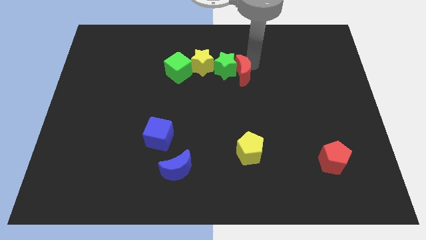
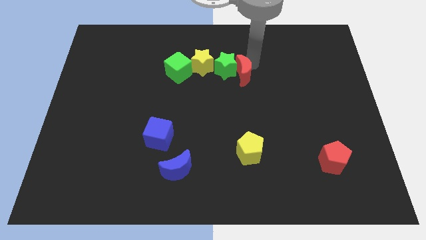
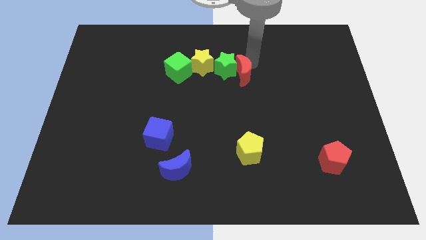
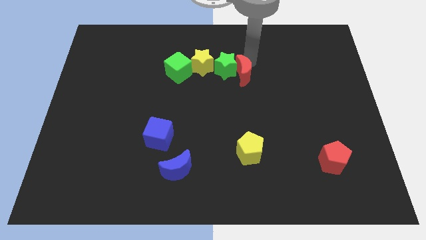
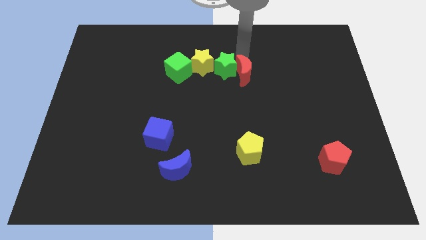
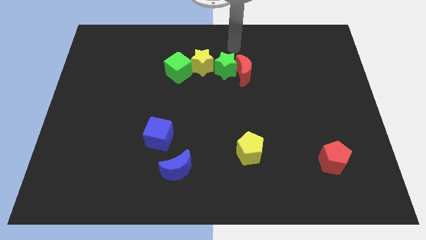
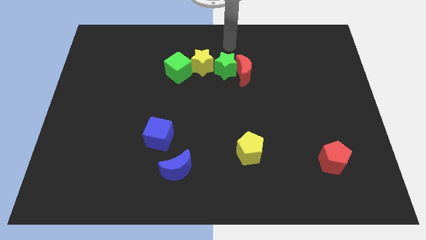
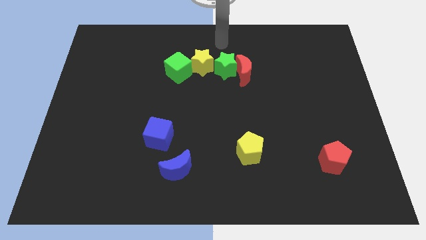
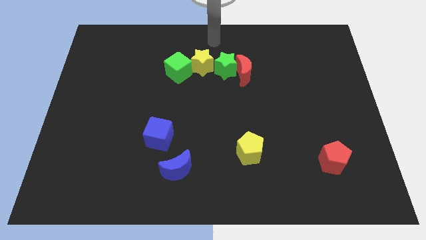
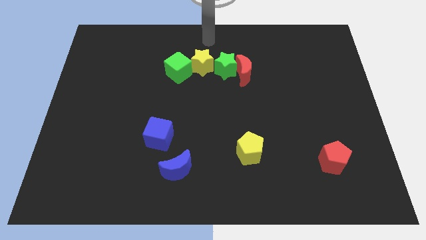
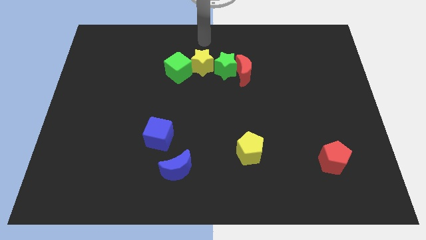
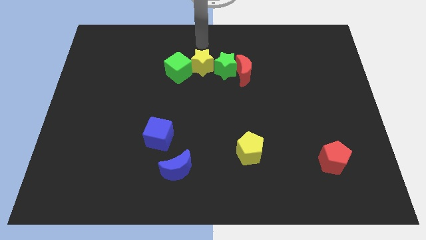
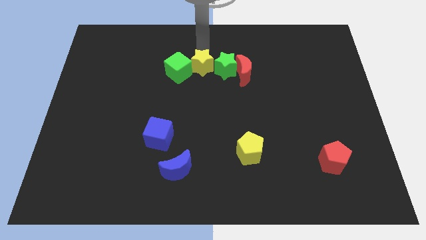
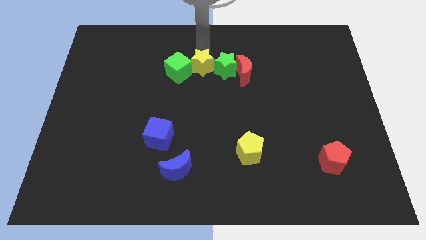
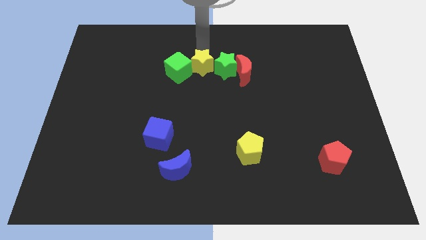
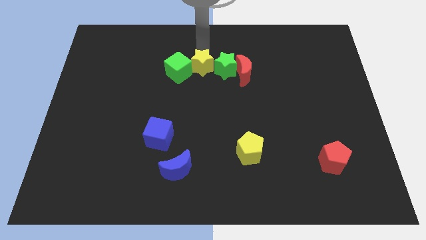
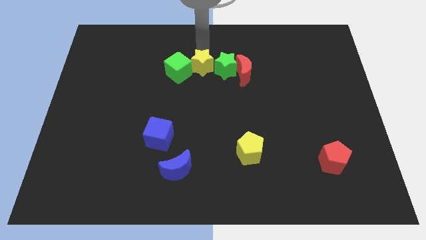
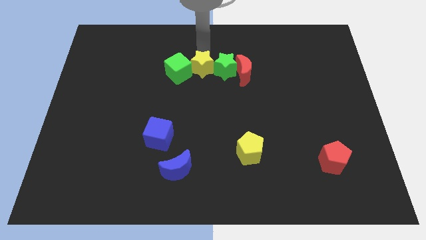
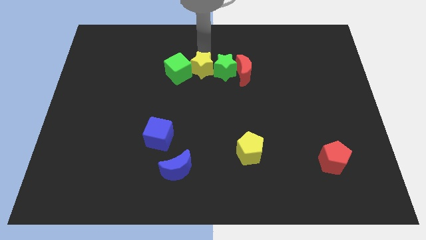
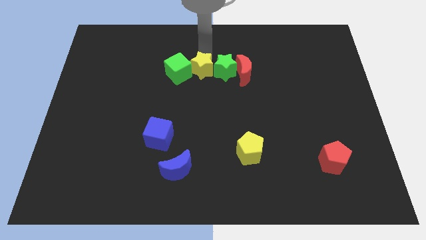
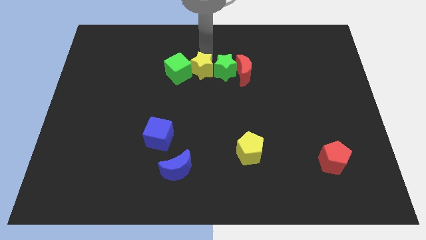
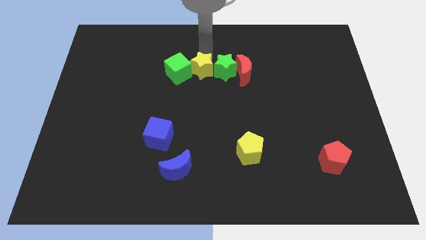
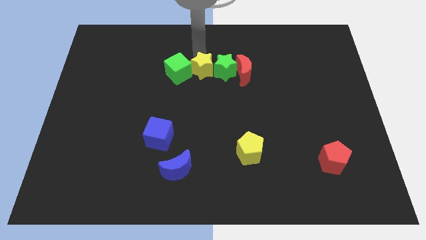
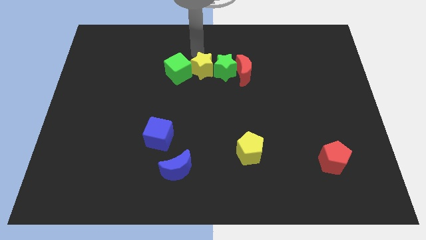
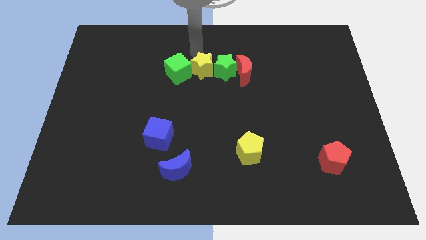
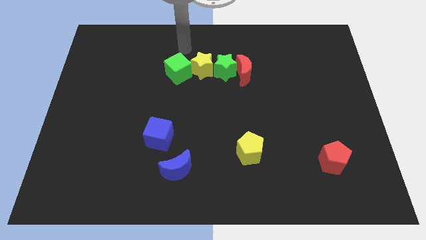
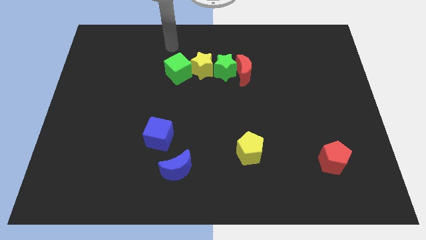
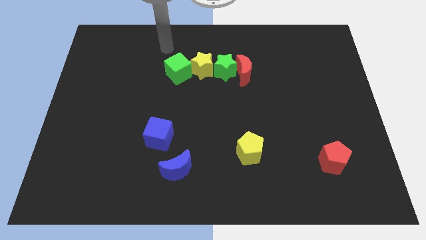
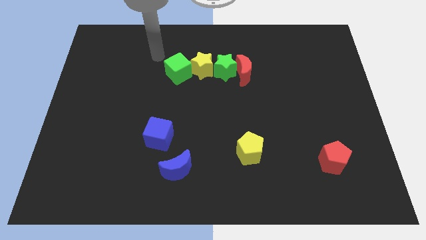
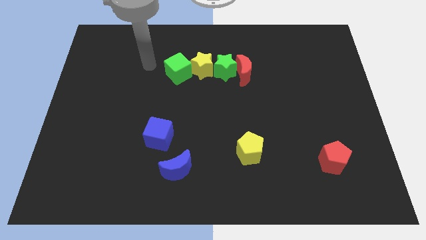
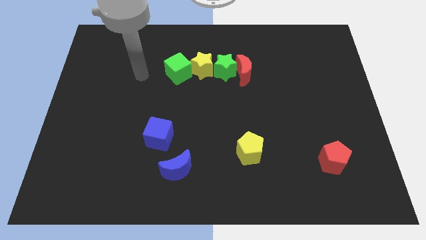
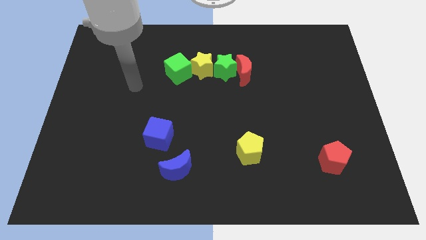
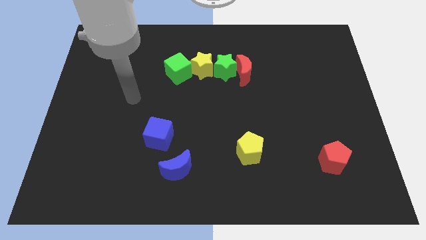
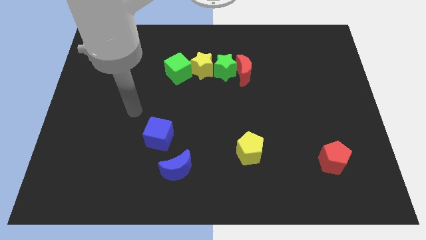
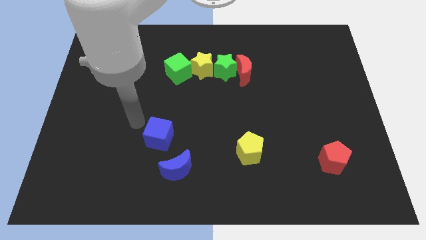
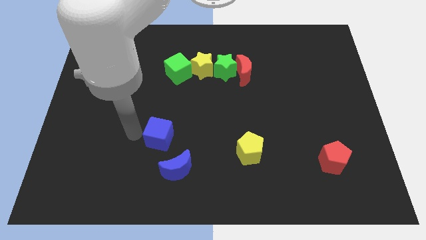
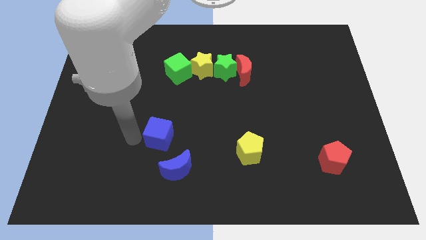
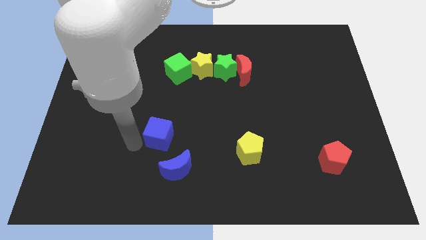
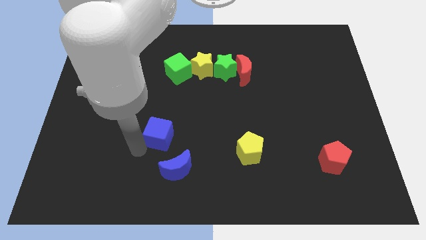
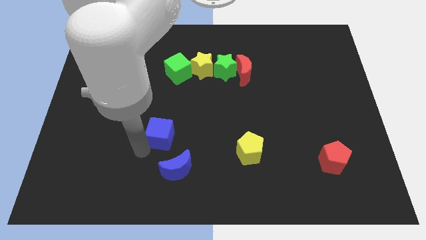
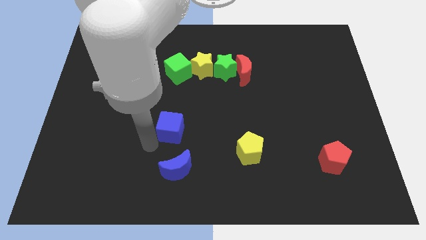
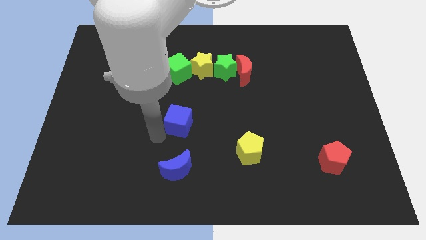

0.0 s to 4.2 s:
slightly push the blue cube

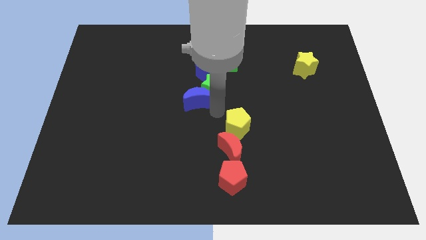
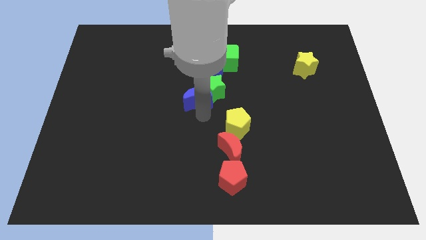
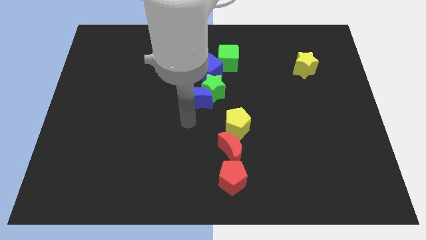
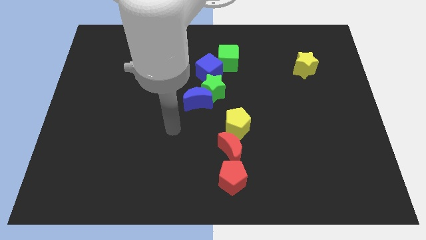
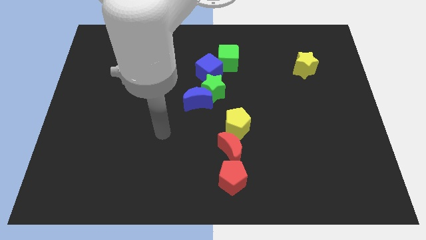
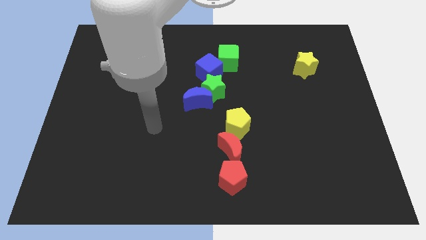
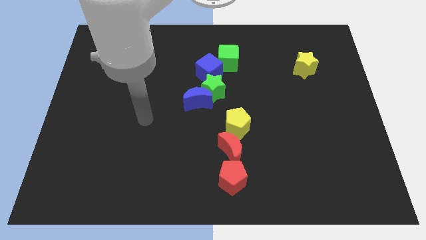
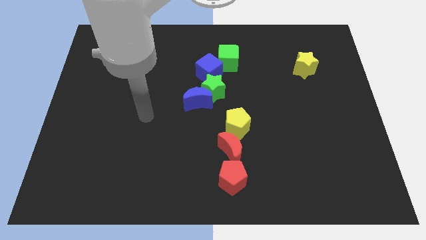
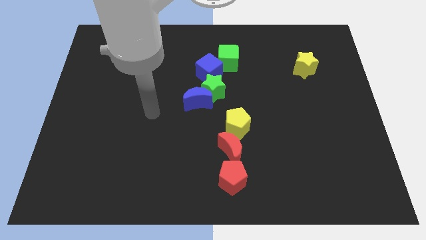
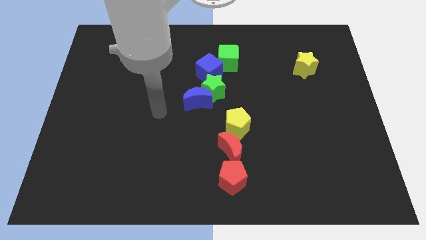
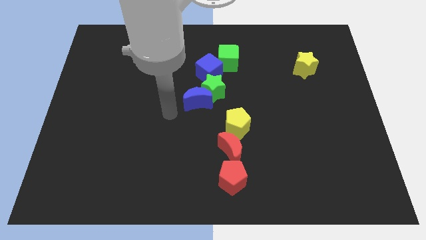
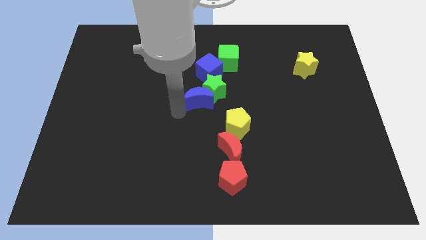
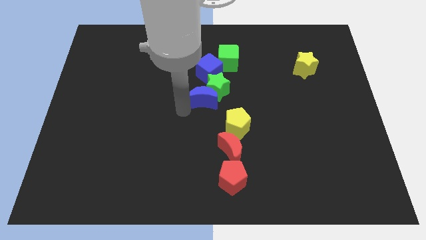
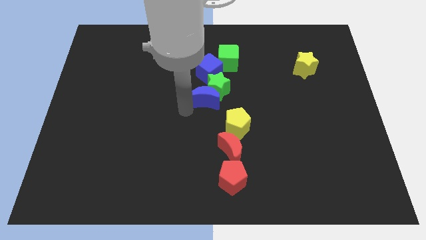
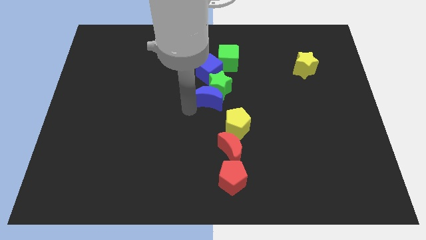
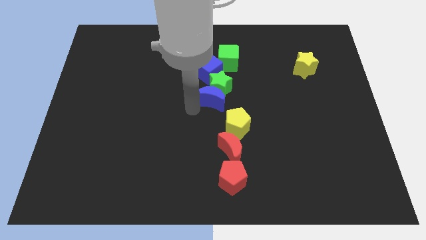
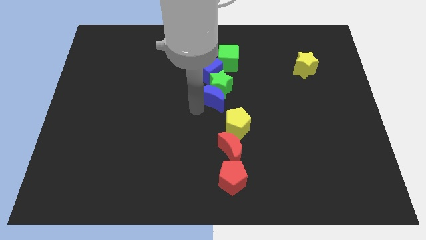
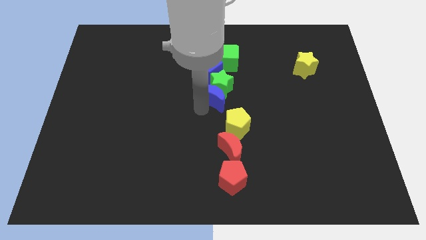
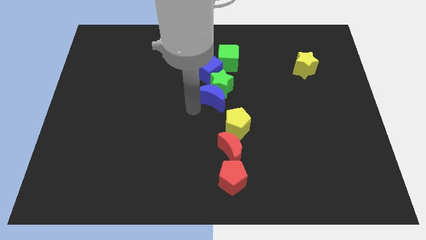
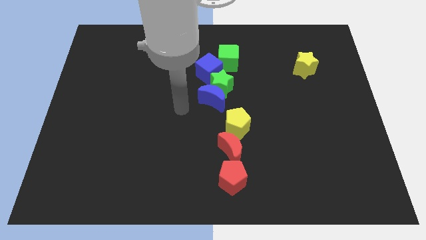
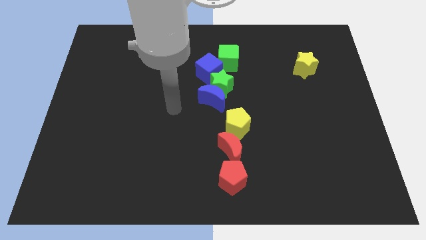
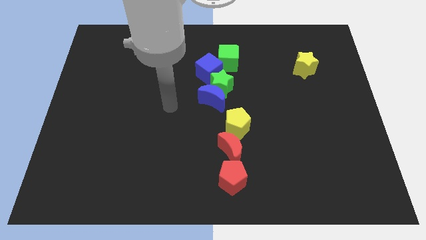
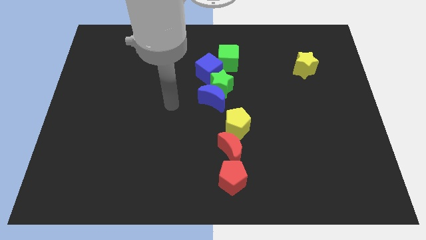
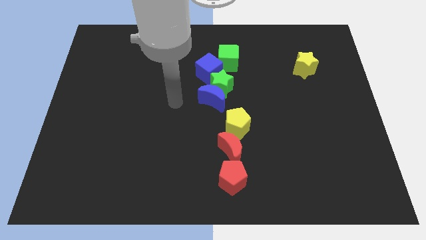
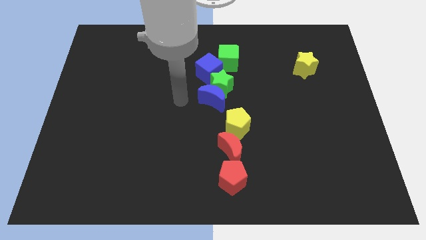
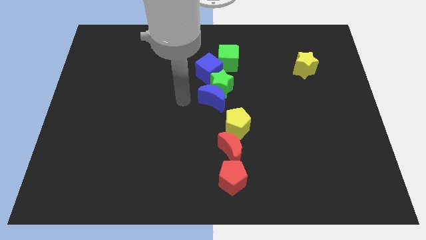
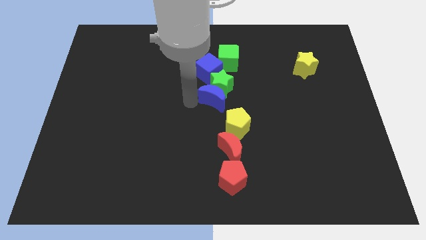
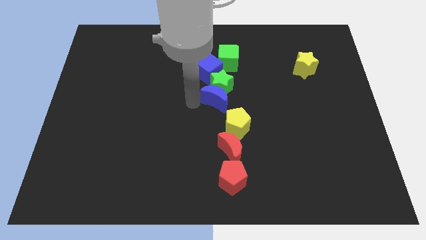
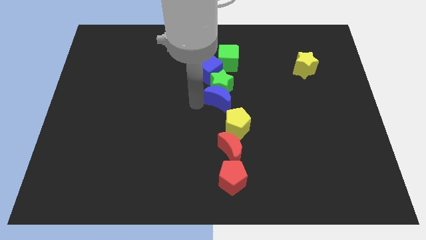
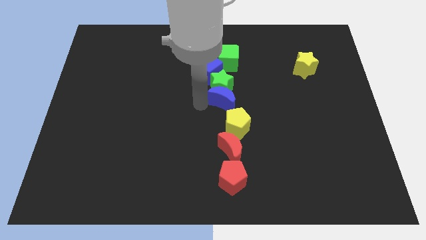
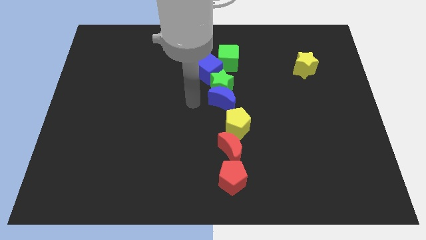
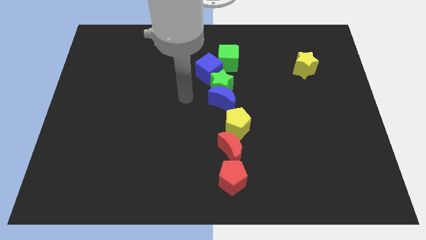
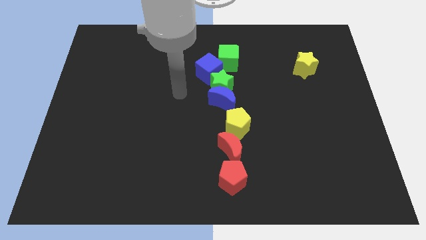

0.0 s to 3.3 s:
push the blue crescent to the bottom of the green star

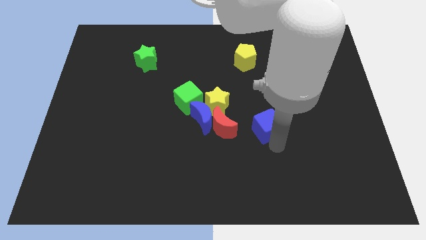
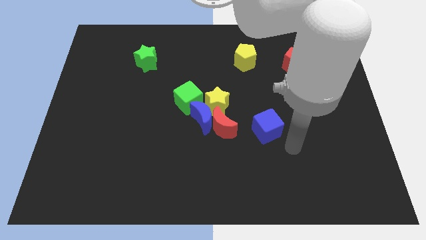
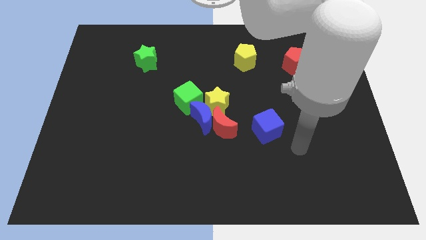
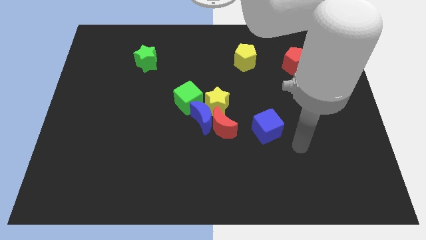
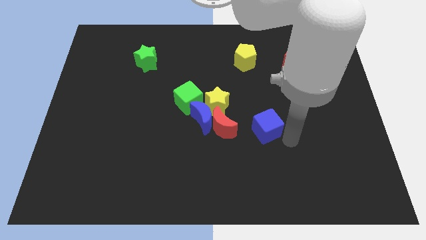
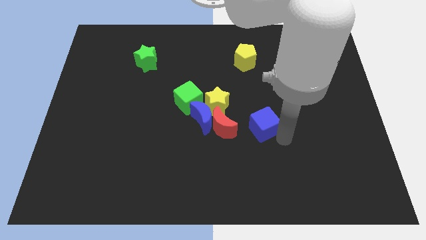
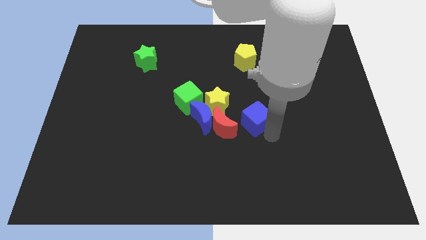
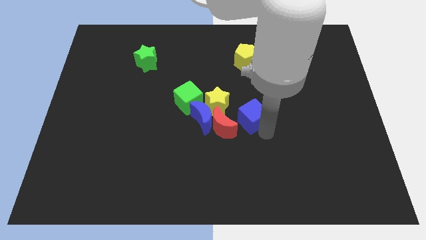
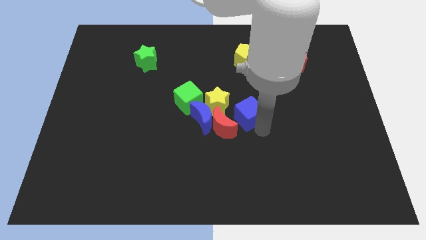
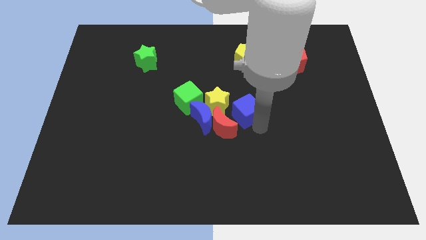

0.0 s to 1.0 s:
move the blue cube right to the red moon

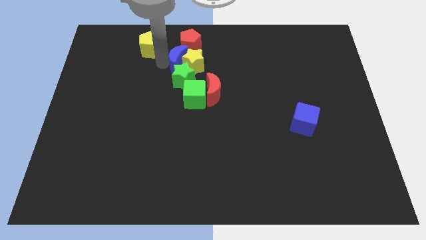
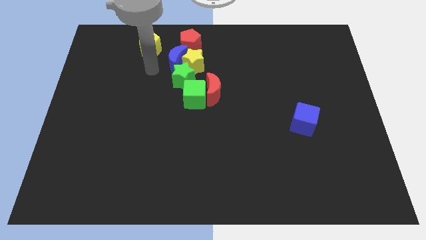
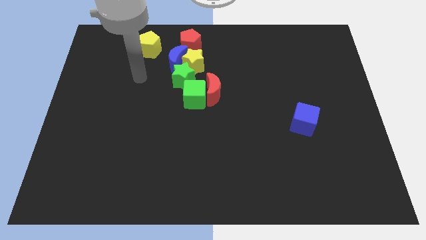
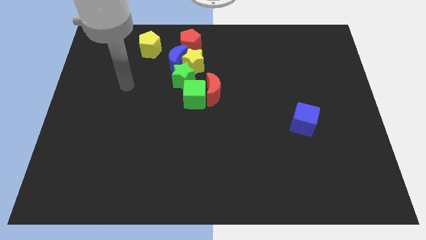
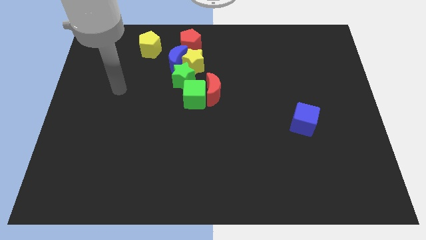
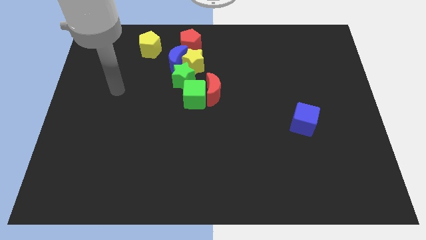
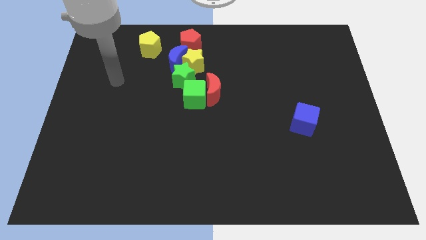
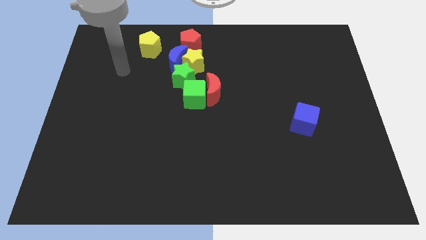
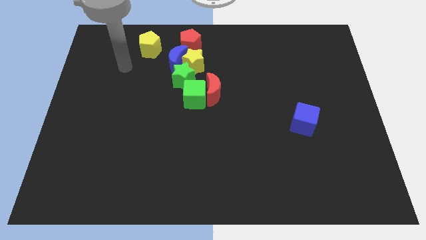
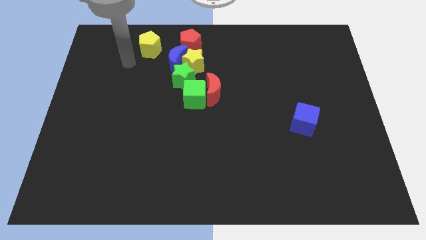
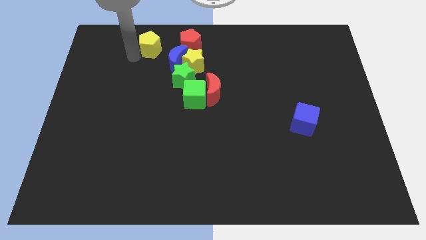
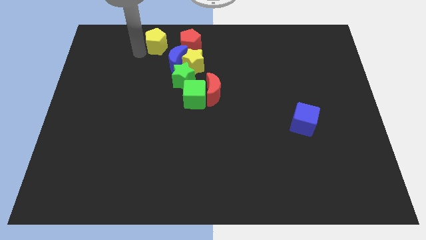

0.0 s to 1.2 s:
move your arm away from the blue moon
